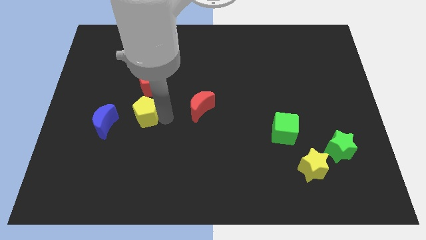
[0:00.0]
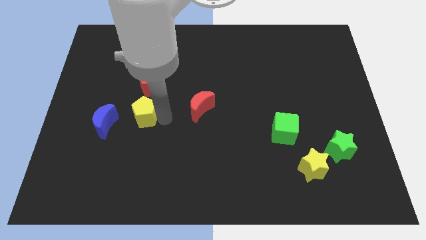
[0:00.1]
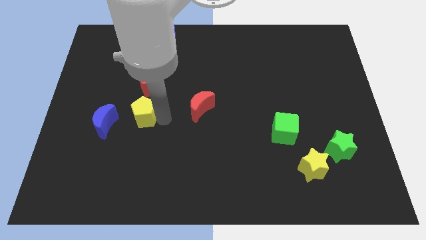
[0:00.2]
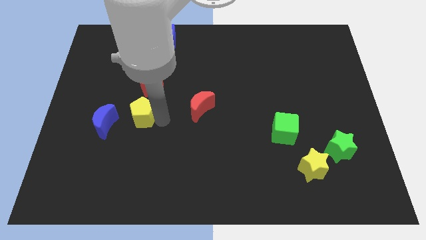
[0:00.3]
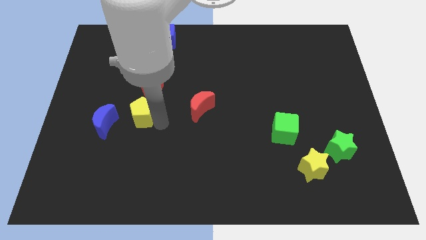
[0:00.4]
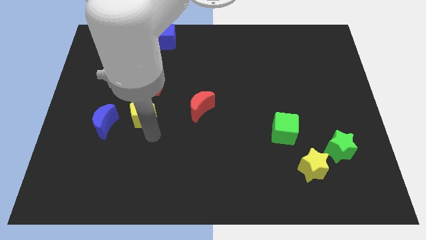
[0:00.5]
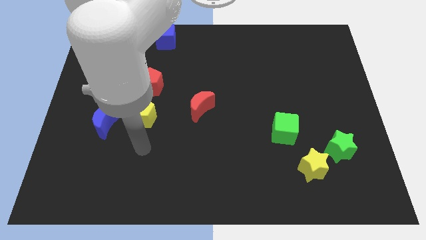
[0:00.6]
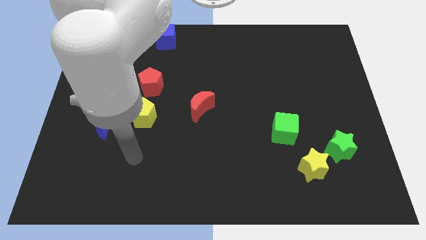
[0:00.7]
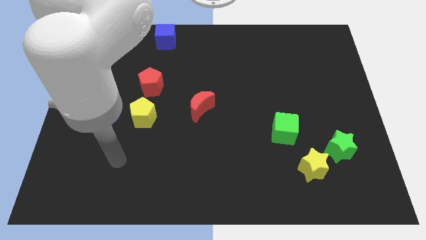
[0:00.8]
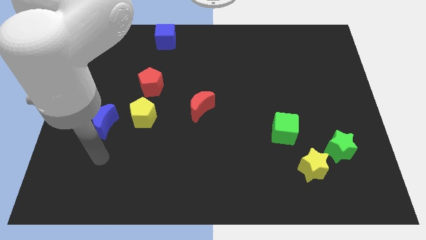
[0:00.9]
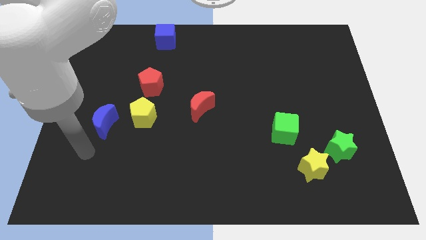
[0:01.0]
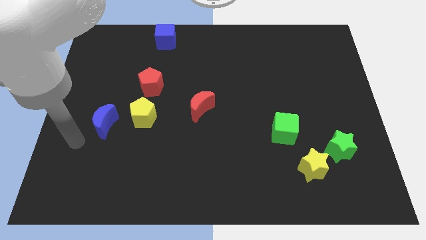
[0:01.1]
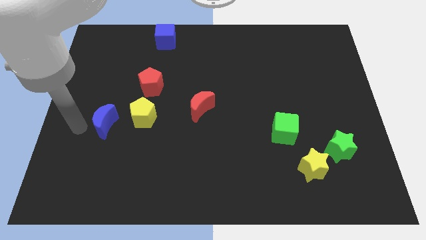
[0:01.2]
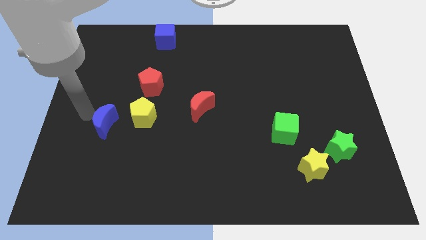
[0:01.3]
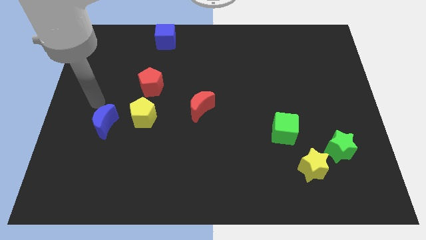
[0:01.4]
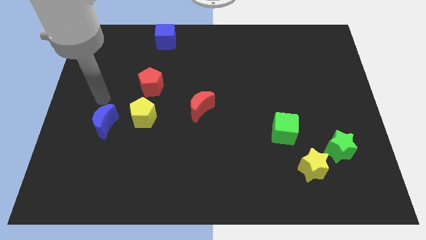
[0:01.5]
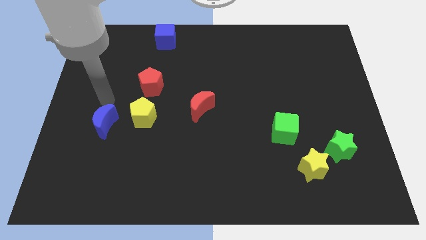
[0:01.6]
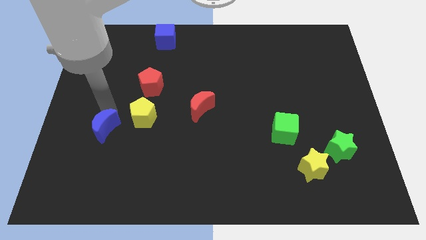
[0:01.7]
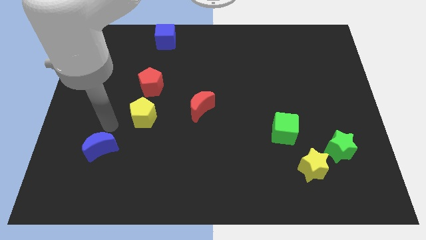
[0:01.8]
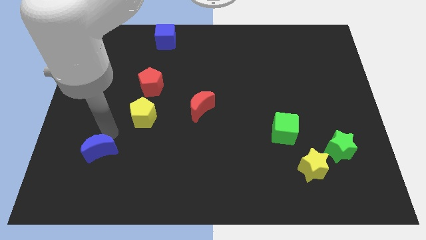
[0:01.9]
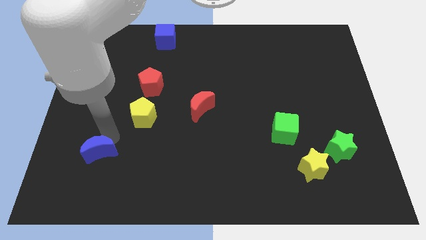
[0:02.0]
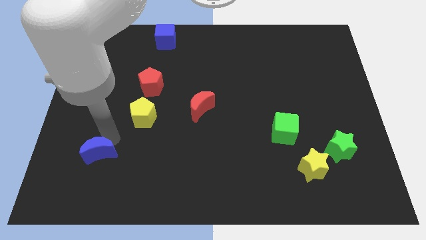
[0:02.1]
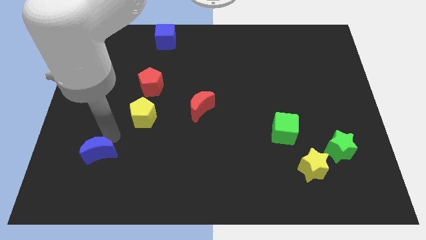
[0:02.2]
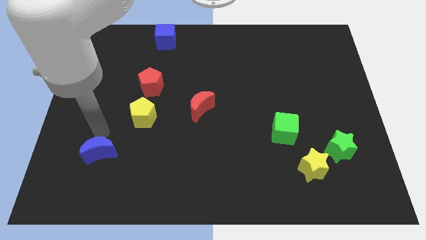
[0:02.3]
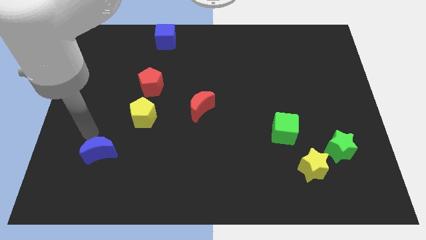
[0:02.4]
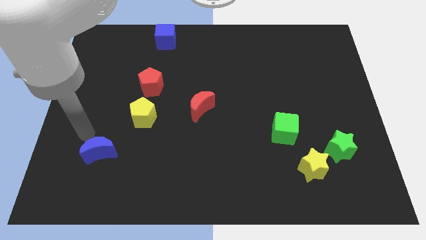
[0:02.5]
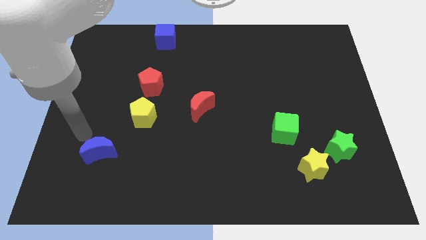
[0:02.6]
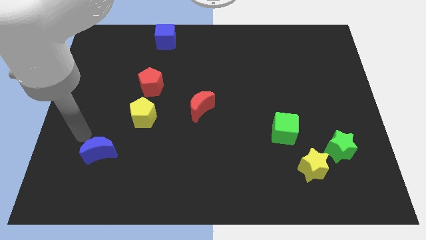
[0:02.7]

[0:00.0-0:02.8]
slightly push the yellow pentagon

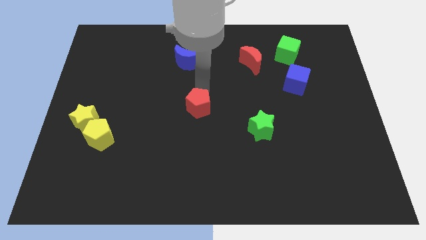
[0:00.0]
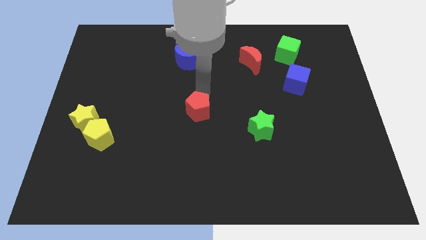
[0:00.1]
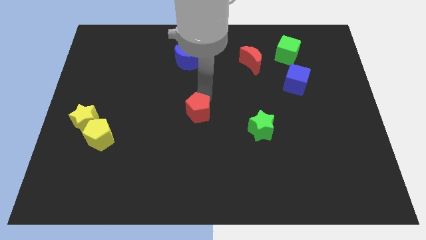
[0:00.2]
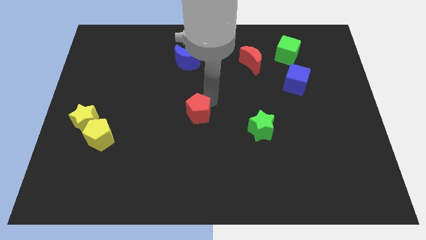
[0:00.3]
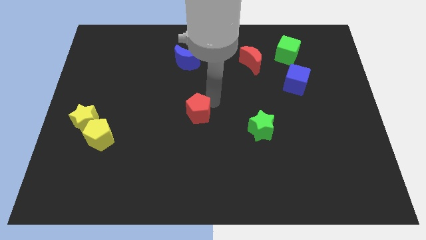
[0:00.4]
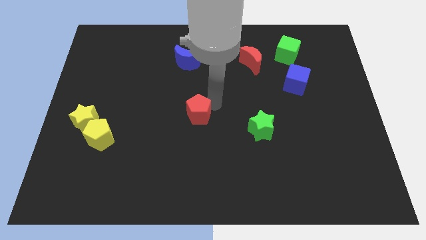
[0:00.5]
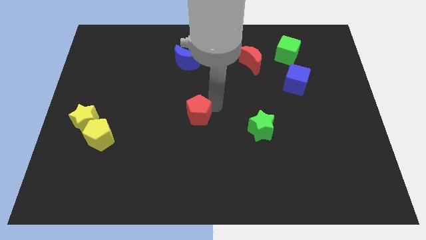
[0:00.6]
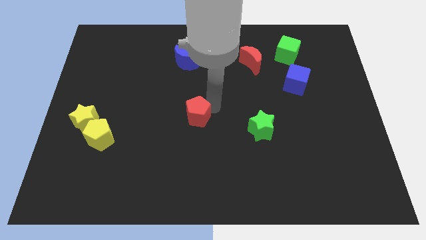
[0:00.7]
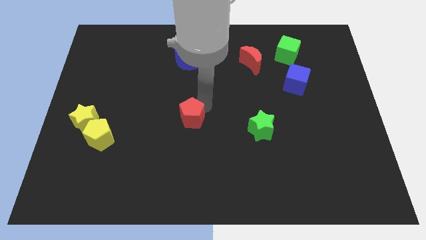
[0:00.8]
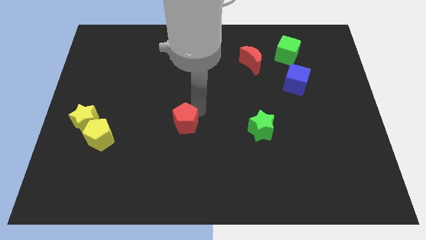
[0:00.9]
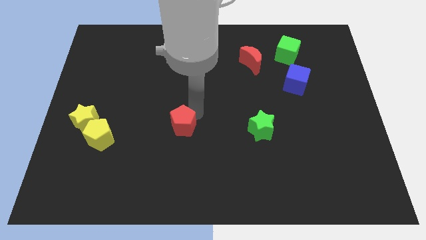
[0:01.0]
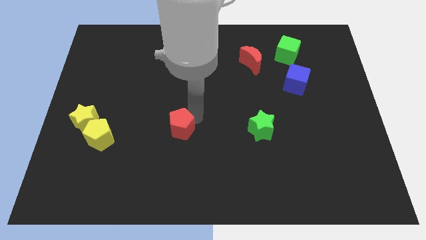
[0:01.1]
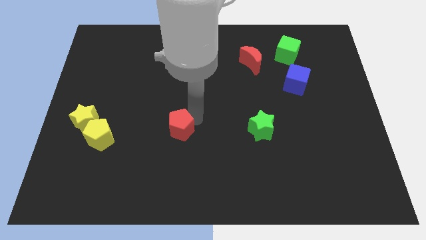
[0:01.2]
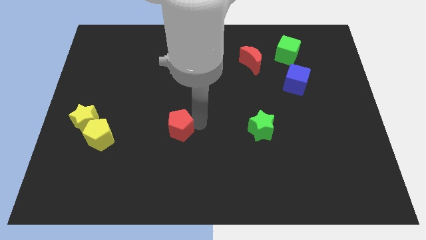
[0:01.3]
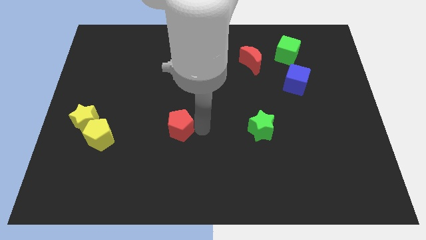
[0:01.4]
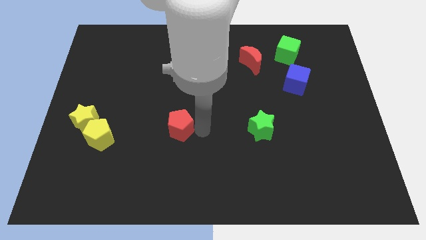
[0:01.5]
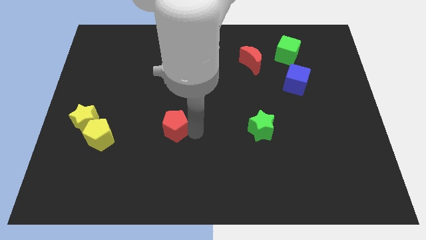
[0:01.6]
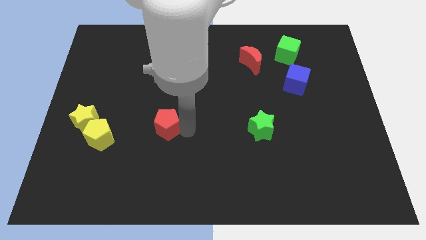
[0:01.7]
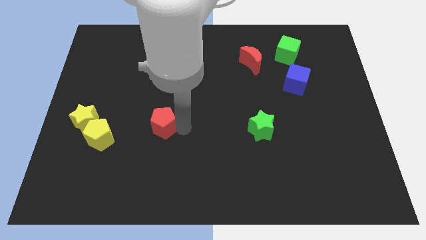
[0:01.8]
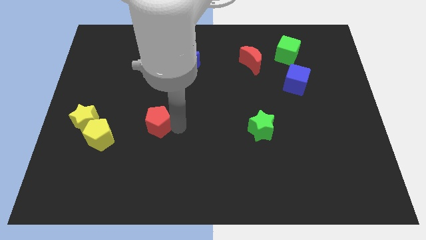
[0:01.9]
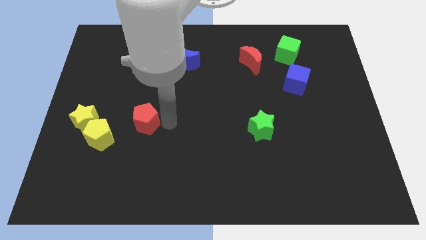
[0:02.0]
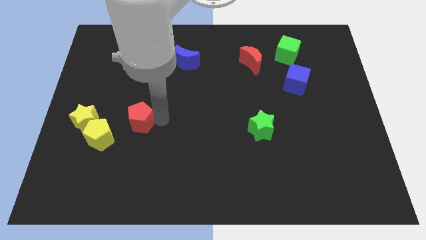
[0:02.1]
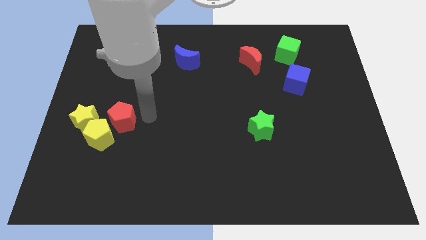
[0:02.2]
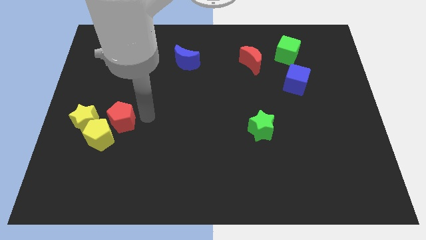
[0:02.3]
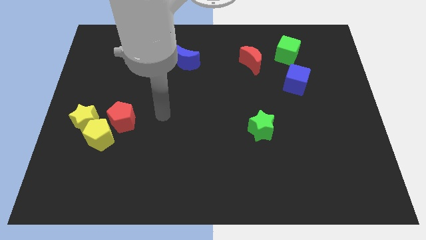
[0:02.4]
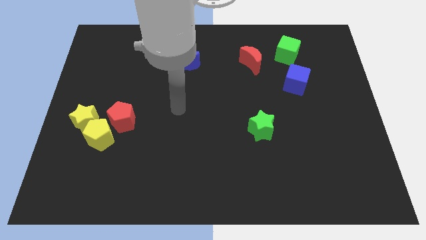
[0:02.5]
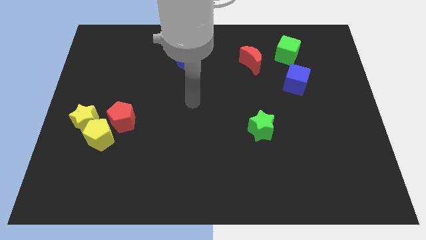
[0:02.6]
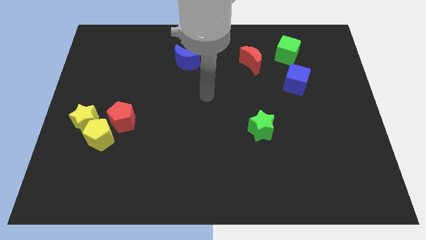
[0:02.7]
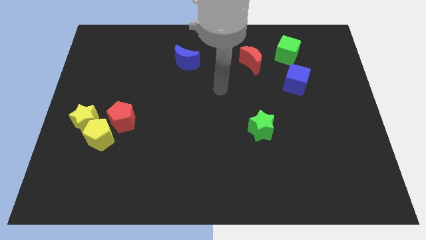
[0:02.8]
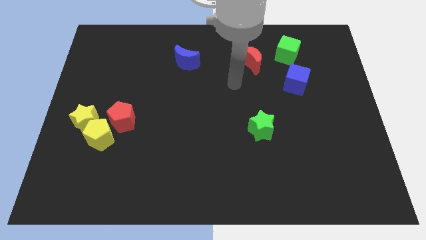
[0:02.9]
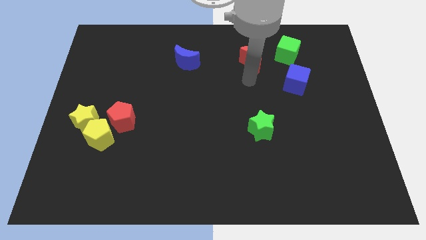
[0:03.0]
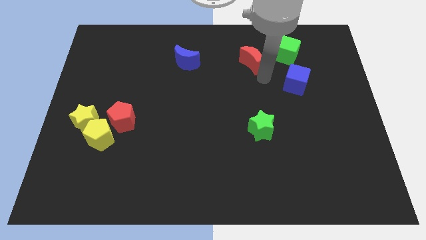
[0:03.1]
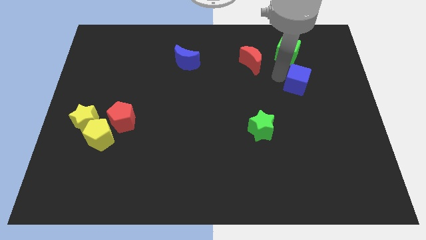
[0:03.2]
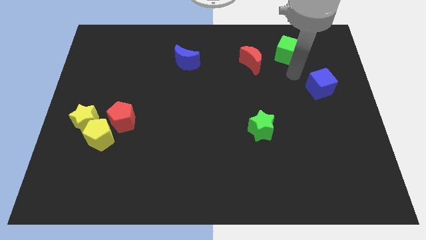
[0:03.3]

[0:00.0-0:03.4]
place the red pentagon on the top right of the yellow pentagon

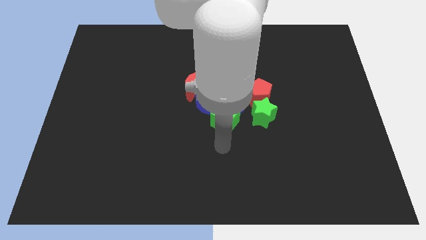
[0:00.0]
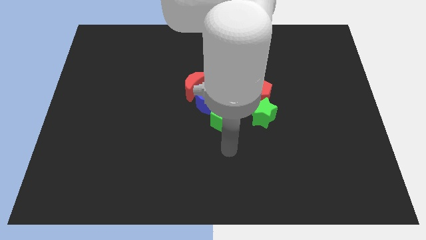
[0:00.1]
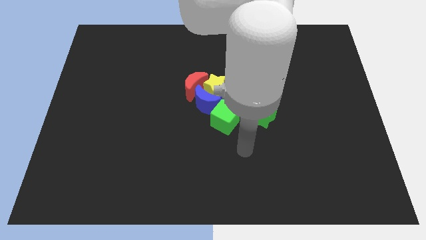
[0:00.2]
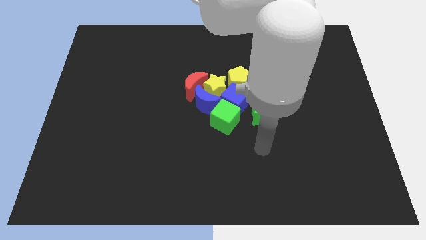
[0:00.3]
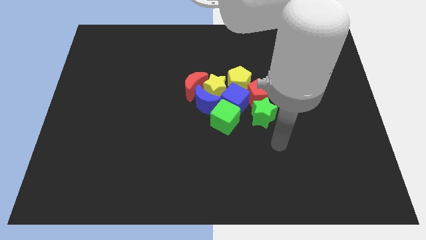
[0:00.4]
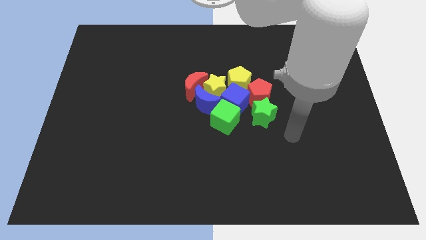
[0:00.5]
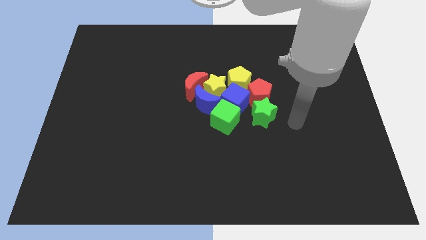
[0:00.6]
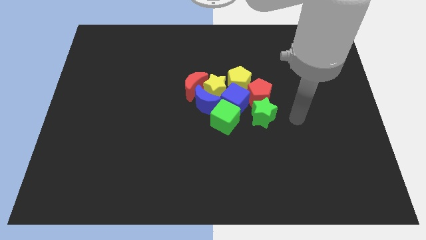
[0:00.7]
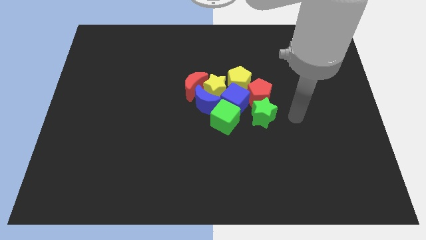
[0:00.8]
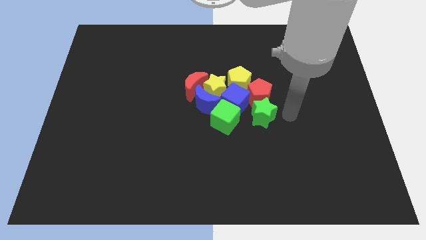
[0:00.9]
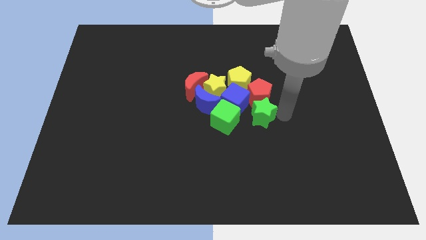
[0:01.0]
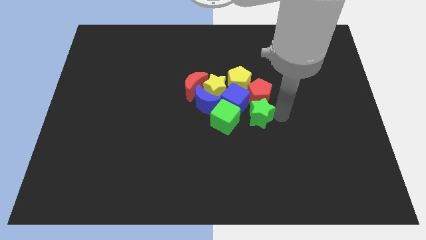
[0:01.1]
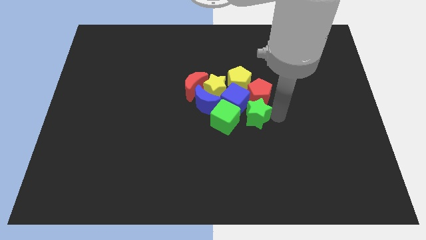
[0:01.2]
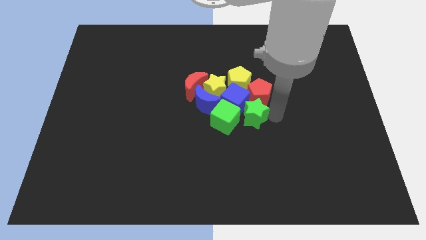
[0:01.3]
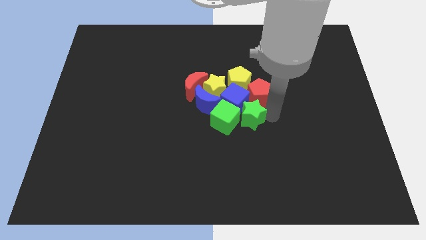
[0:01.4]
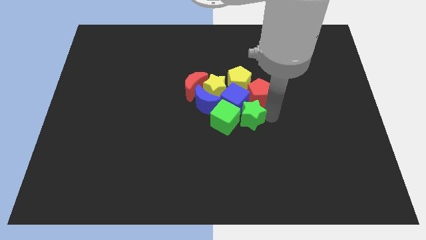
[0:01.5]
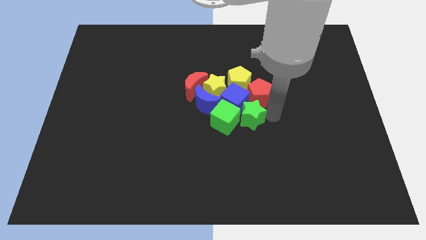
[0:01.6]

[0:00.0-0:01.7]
move the green star close to the group of the blocks

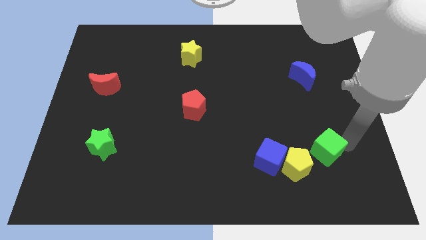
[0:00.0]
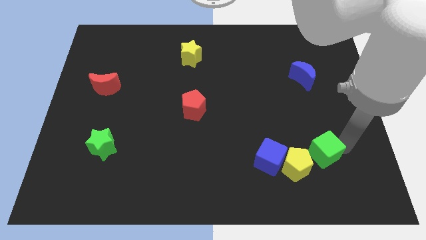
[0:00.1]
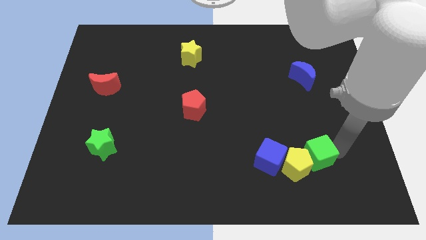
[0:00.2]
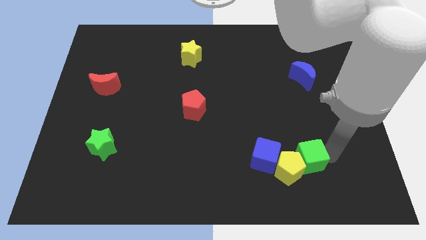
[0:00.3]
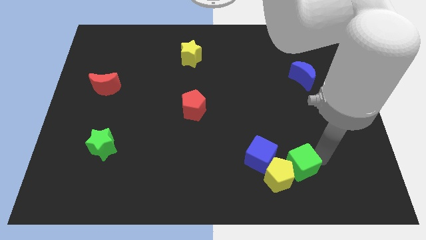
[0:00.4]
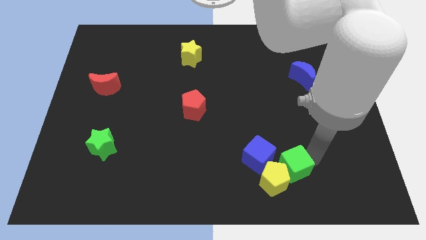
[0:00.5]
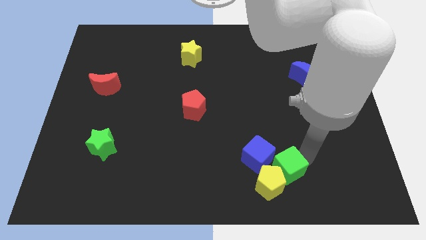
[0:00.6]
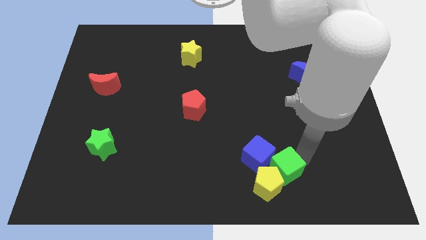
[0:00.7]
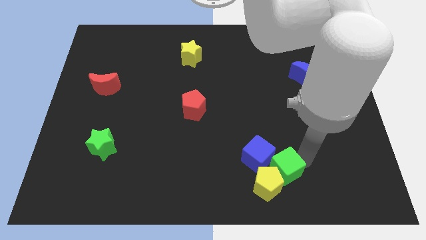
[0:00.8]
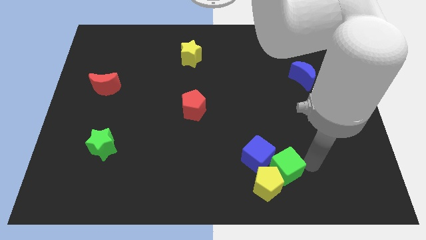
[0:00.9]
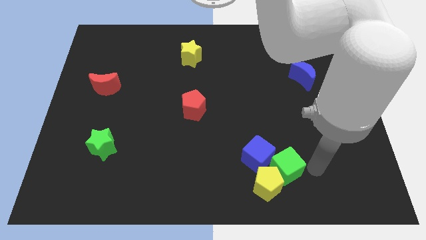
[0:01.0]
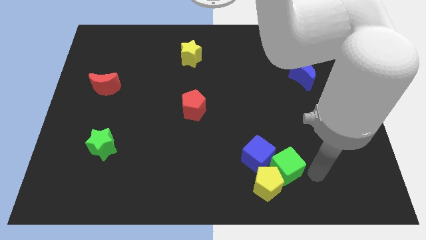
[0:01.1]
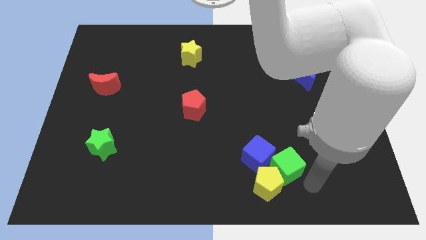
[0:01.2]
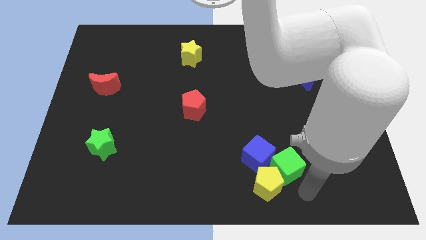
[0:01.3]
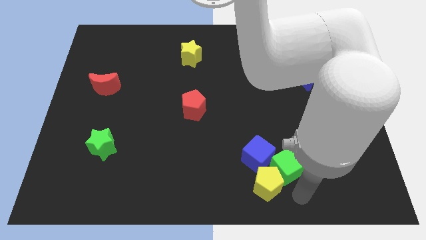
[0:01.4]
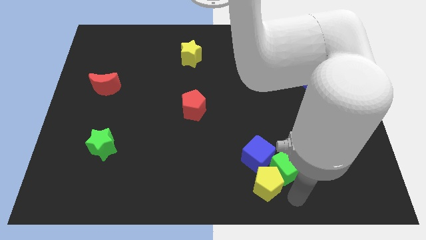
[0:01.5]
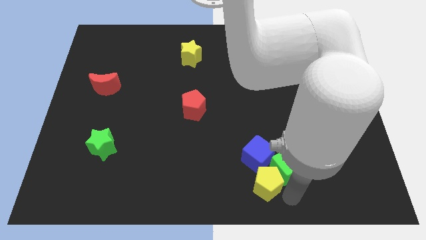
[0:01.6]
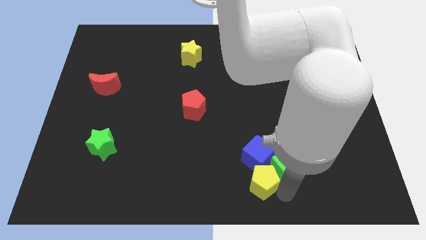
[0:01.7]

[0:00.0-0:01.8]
push green cube into yellow pentagon
